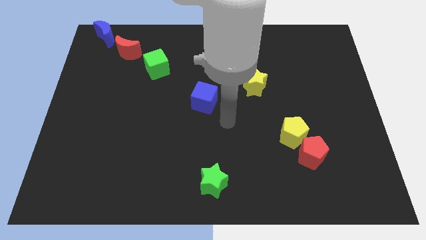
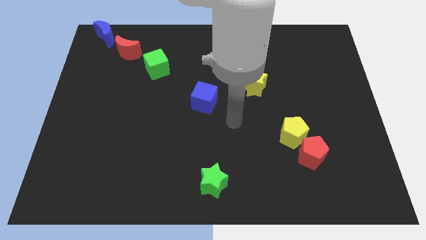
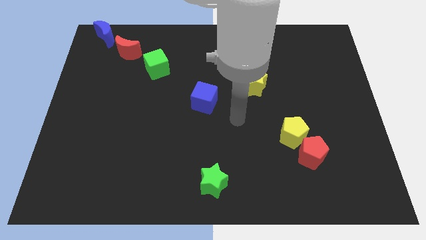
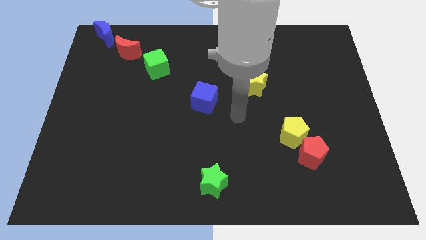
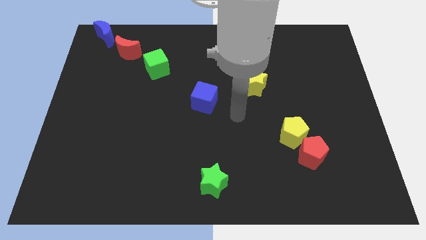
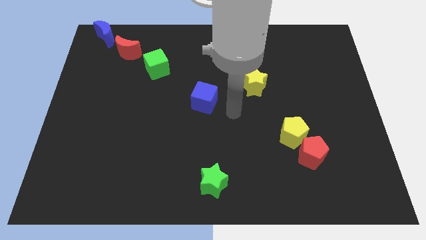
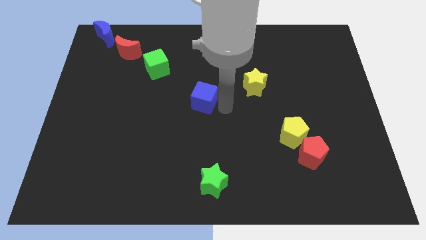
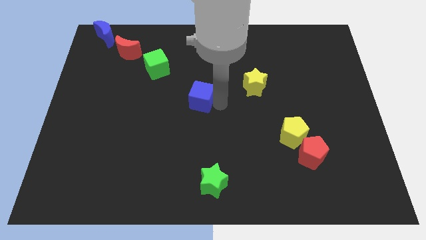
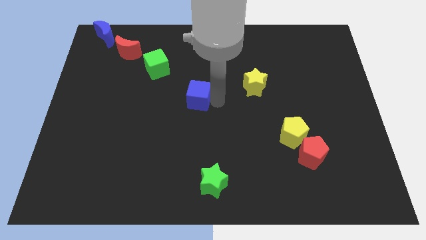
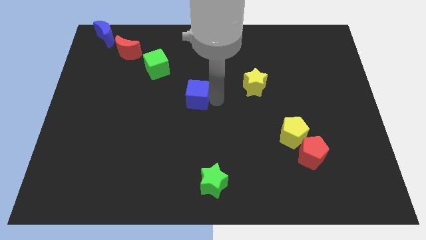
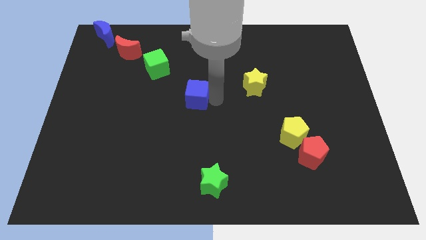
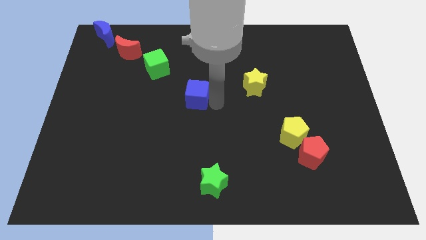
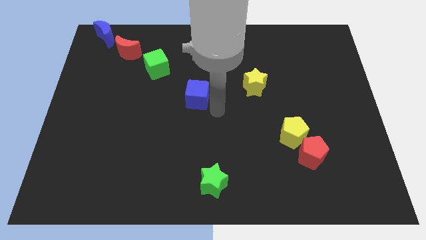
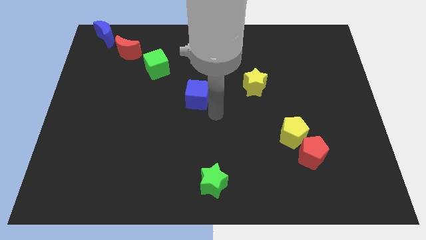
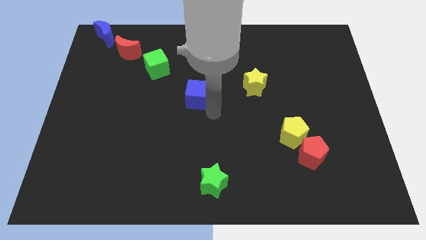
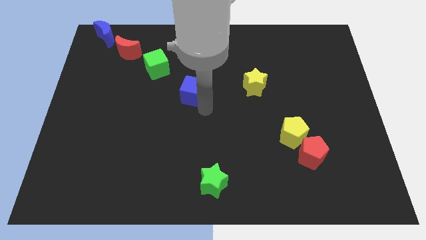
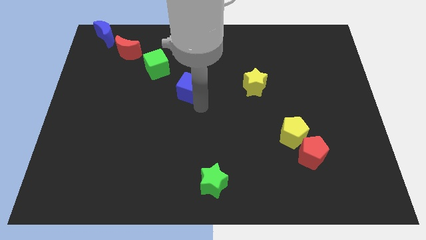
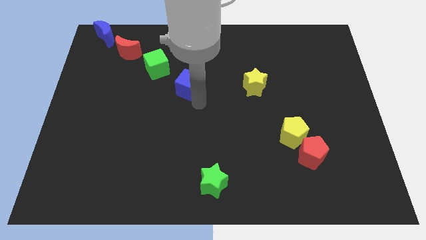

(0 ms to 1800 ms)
move the blue cube close to the green cube

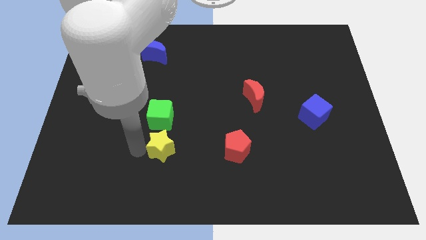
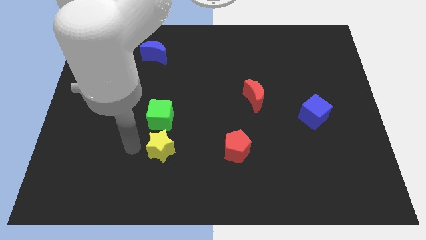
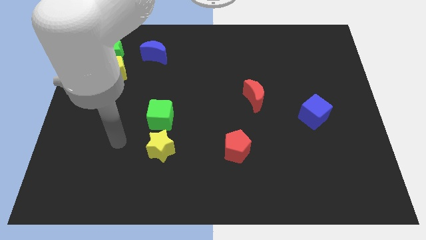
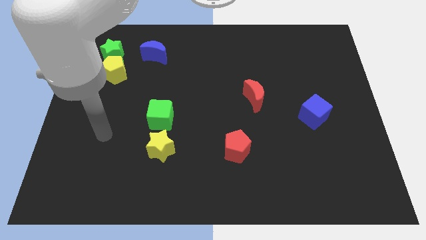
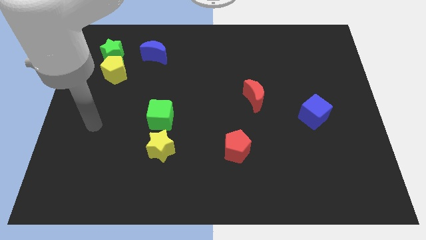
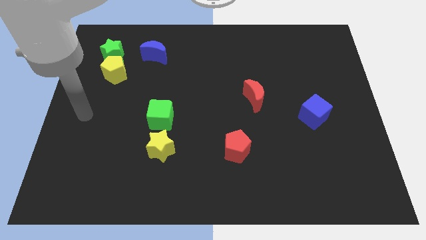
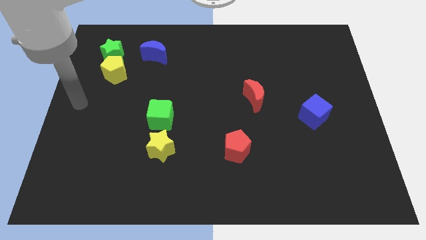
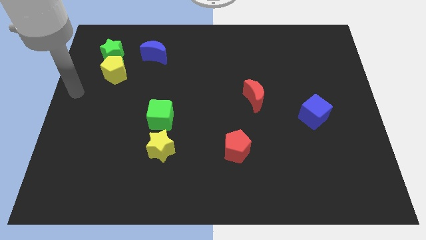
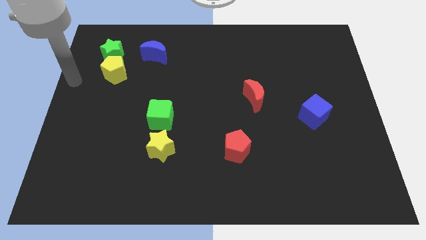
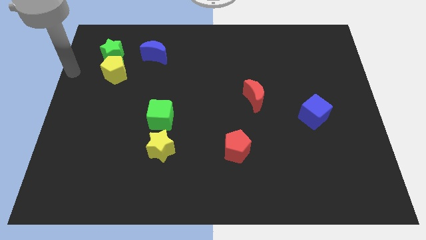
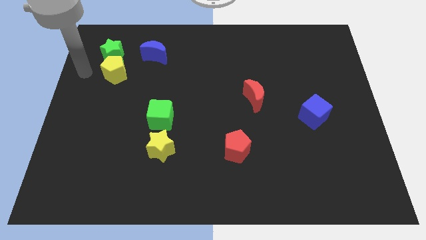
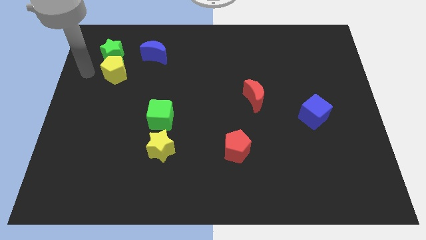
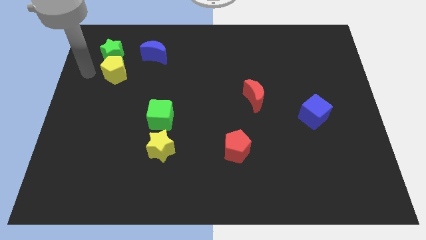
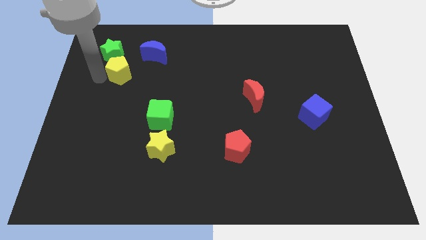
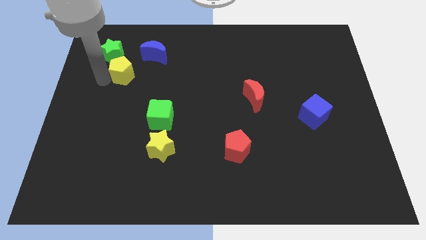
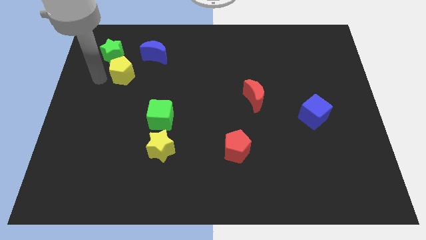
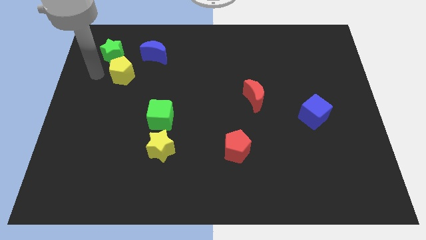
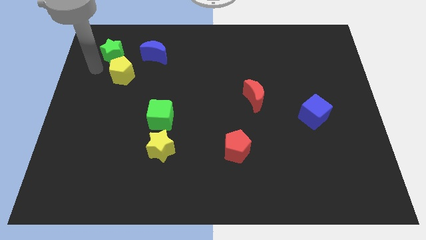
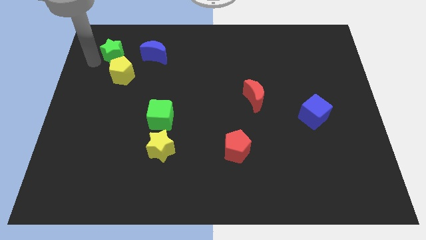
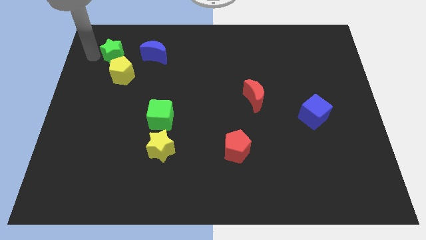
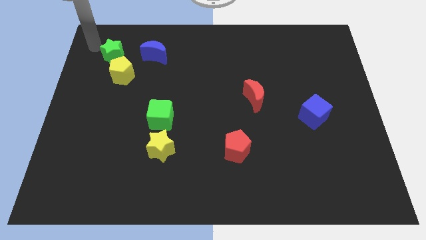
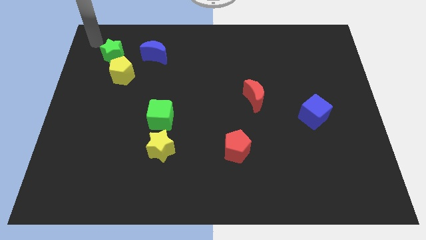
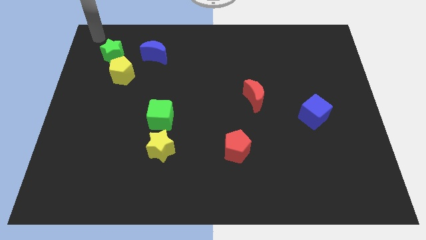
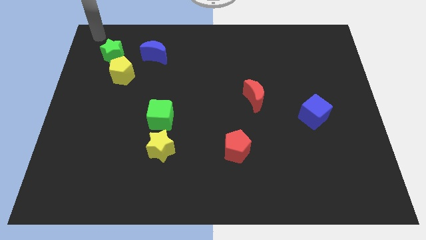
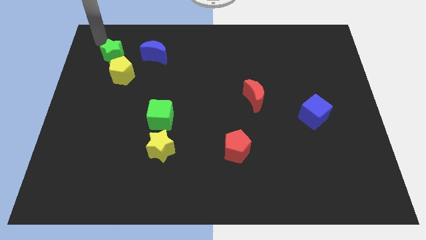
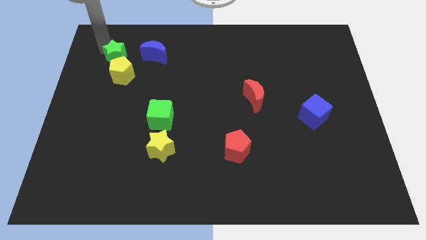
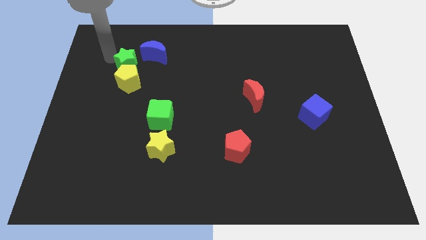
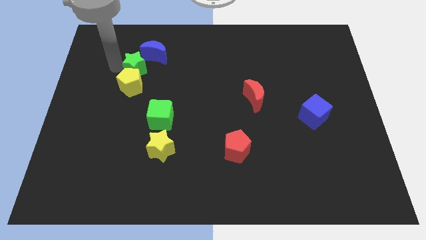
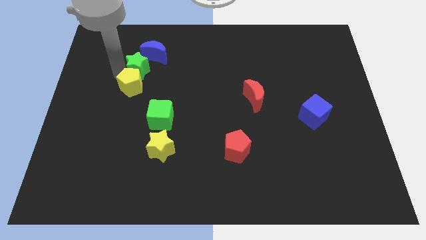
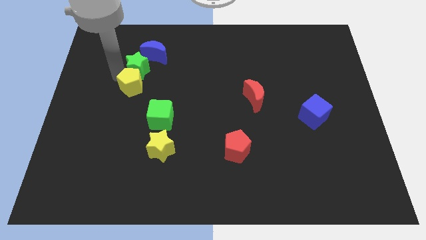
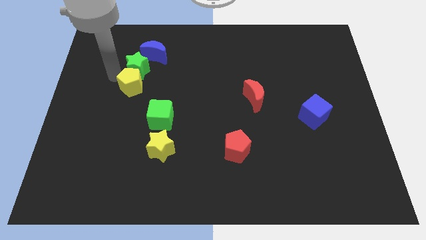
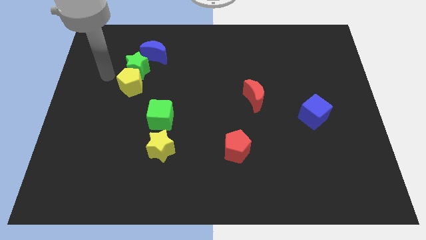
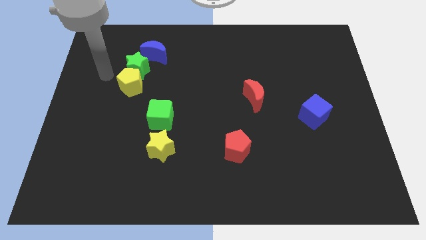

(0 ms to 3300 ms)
push the green star and yellow pentagon at the bottom side of the blue crescent

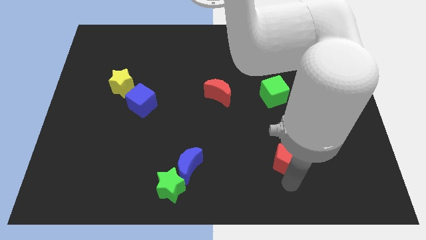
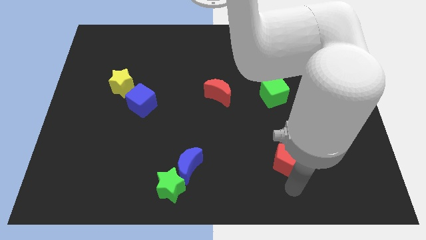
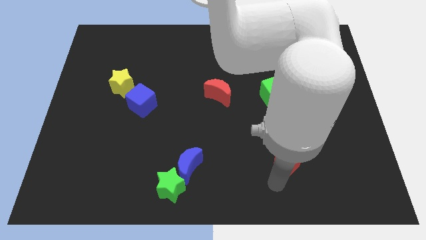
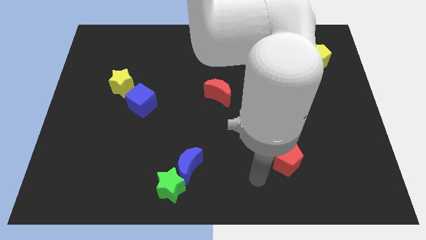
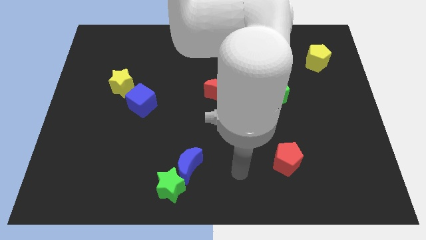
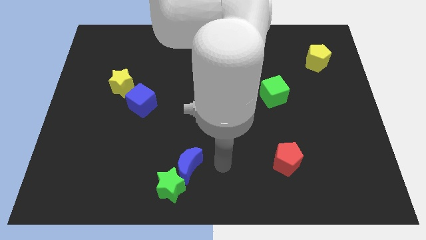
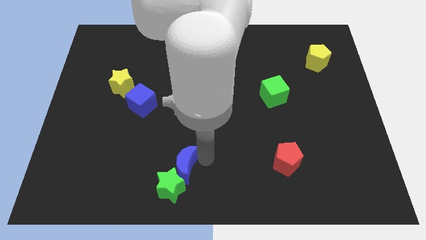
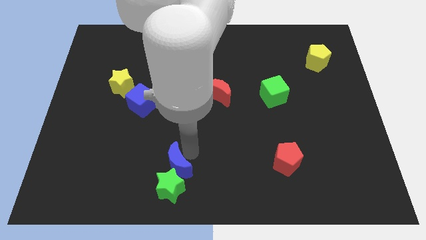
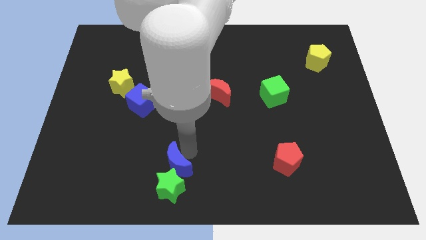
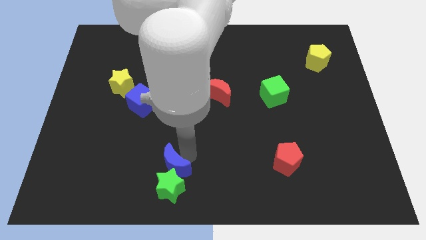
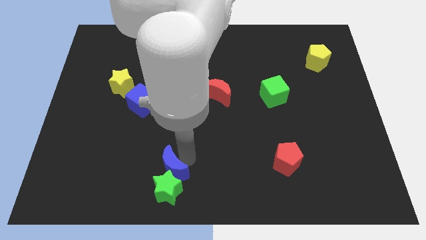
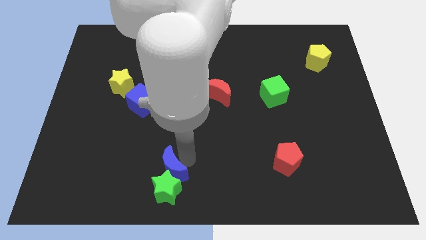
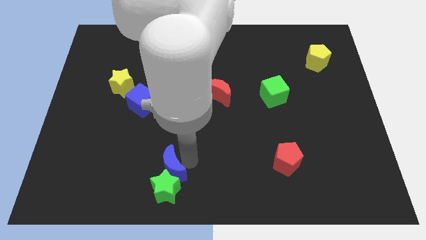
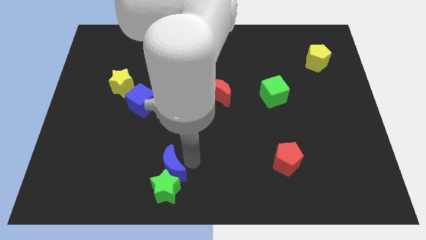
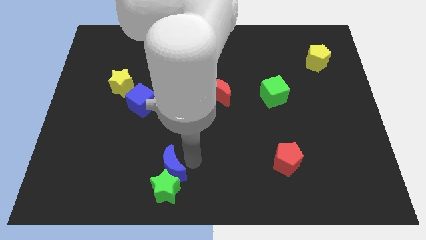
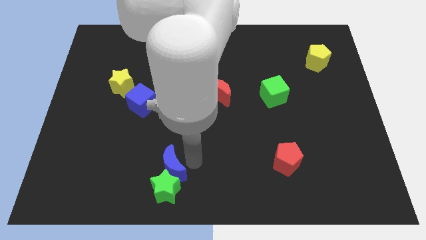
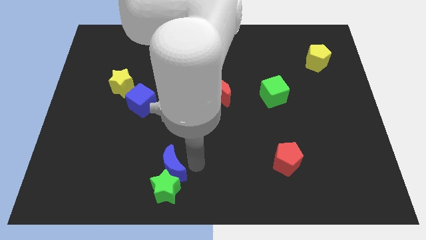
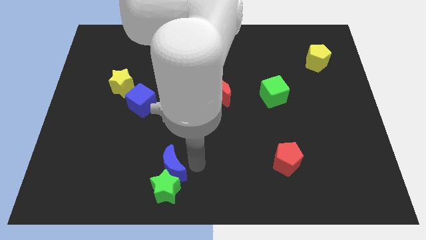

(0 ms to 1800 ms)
push the blue moon into the green star

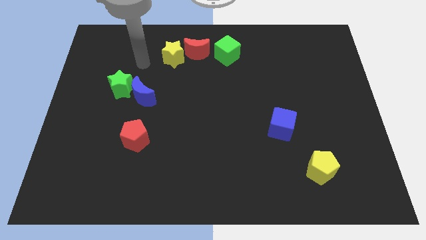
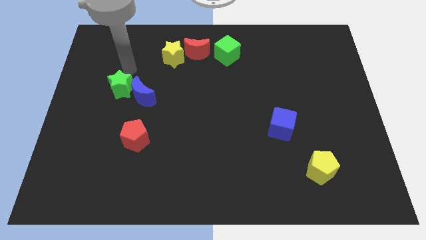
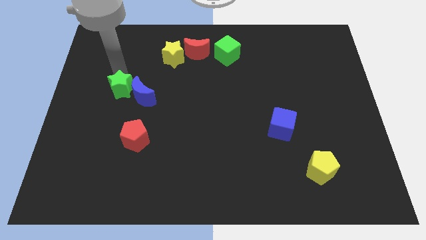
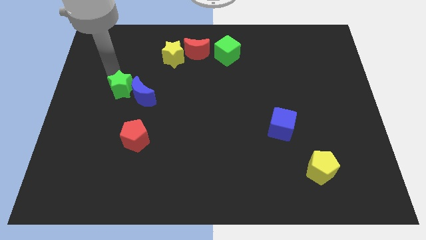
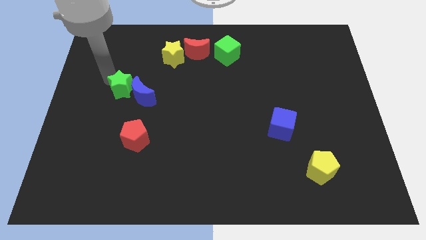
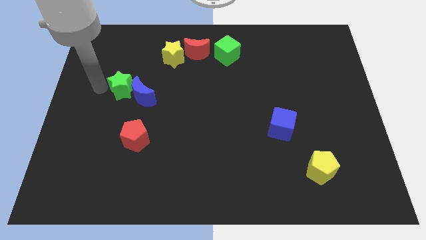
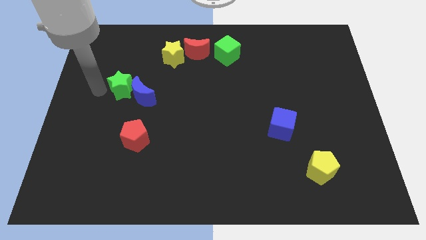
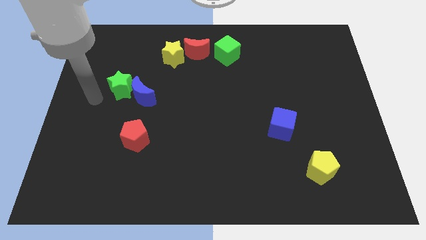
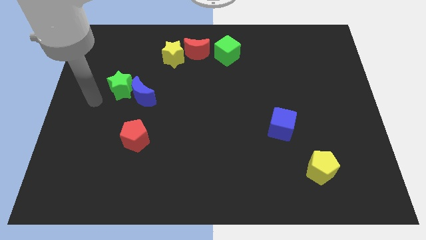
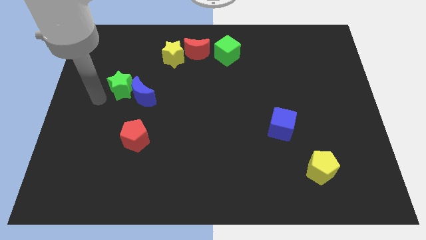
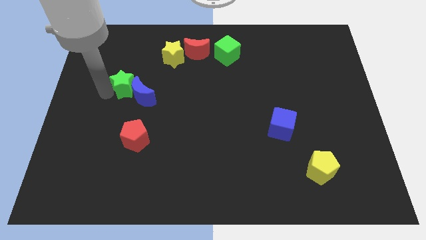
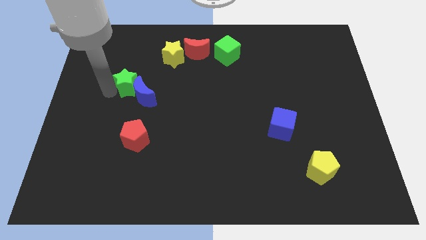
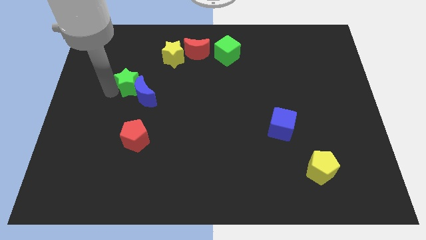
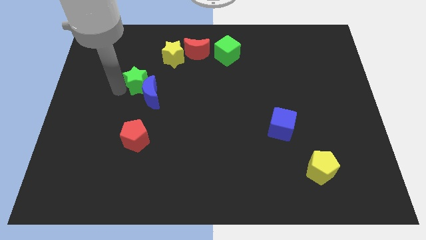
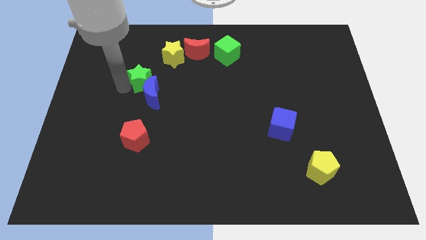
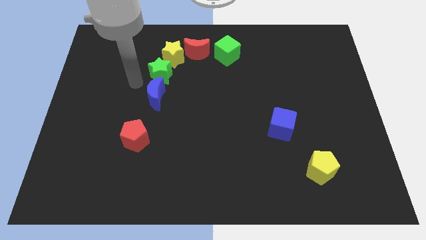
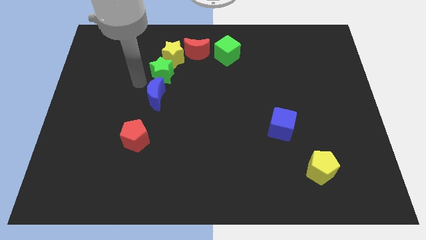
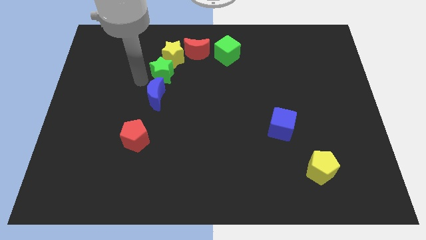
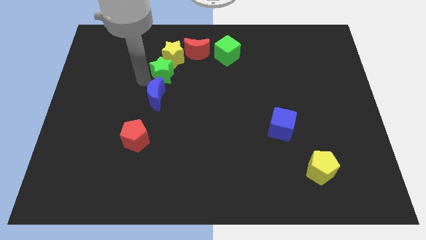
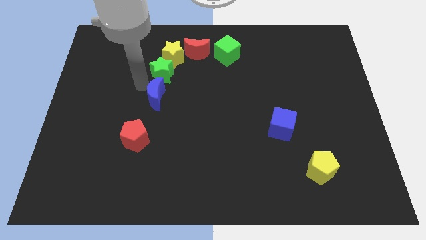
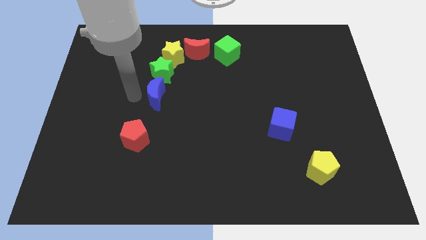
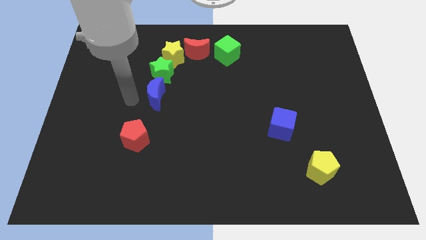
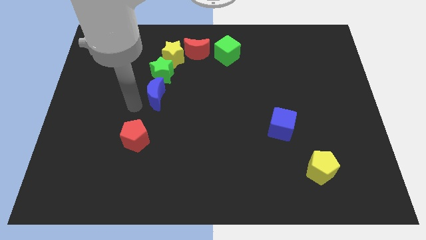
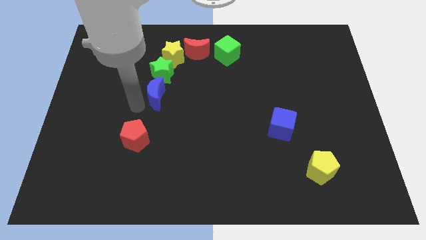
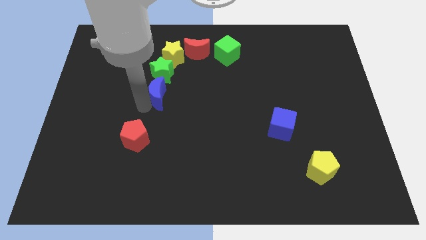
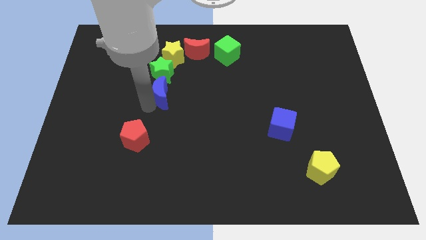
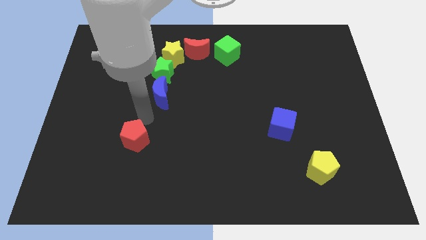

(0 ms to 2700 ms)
move the blue crescent below the green star
